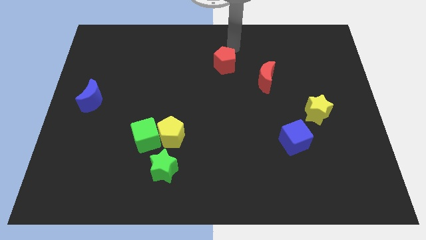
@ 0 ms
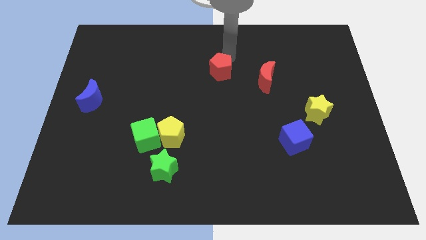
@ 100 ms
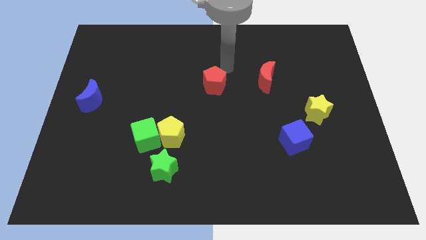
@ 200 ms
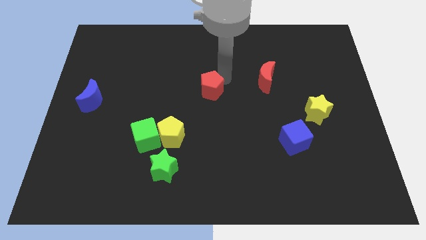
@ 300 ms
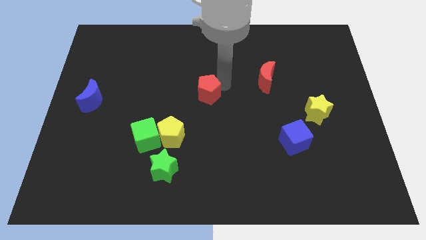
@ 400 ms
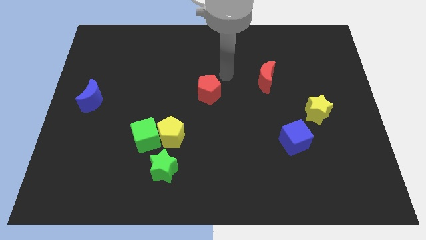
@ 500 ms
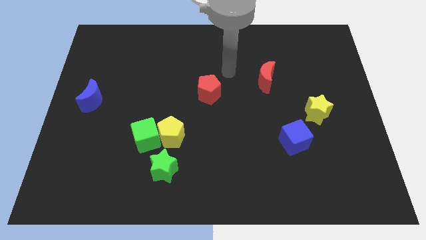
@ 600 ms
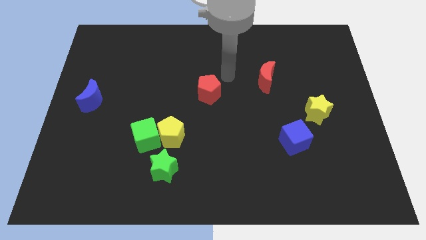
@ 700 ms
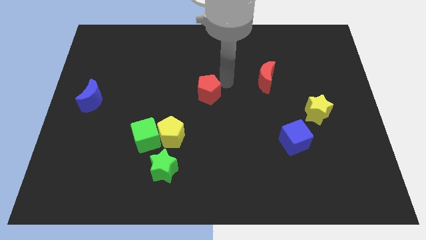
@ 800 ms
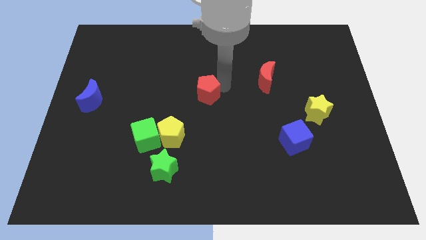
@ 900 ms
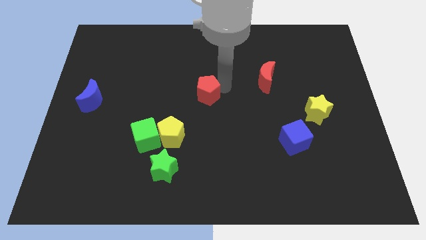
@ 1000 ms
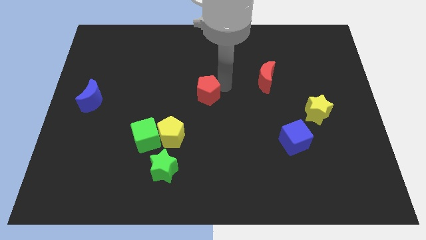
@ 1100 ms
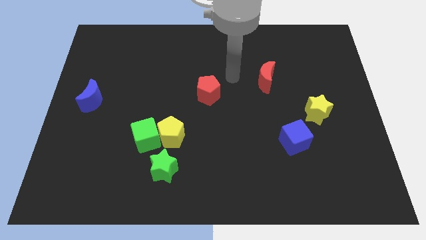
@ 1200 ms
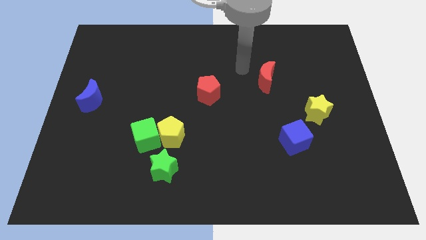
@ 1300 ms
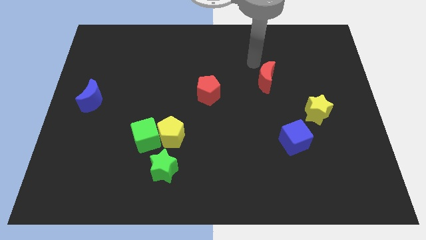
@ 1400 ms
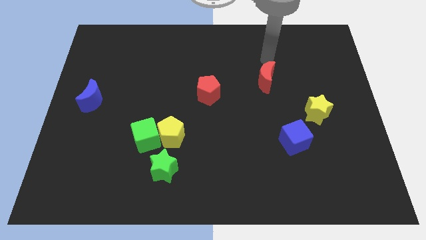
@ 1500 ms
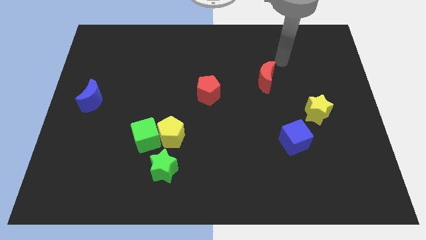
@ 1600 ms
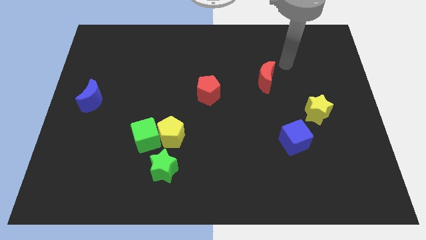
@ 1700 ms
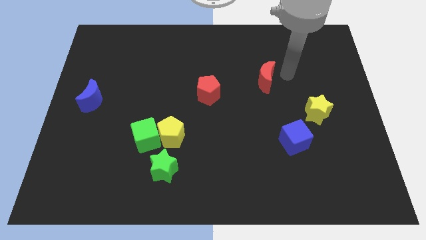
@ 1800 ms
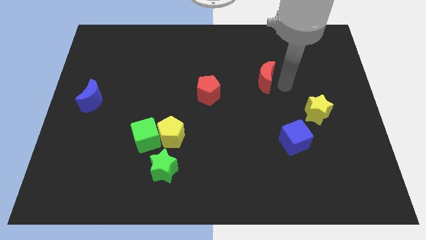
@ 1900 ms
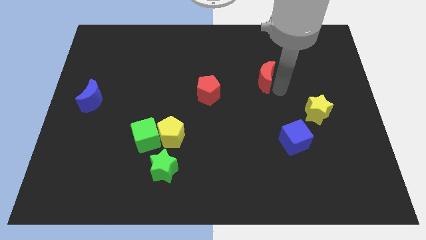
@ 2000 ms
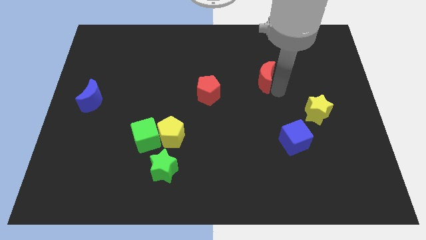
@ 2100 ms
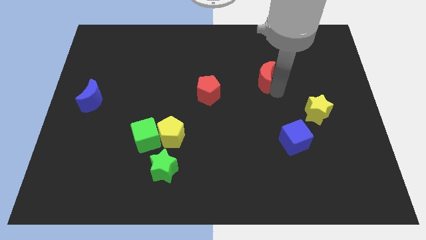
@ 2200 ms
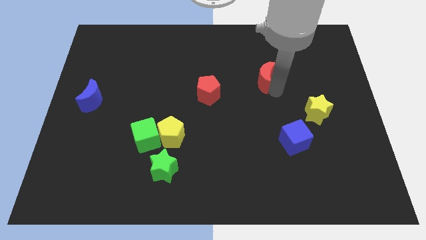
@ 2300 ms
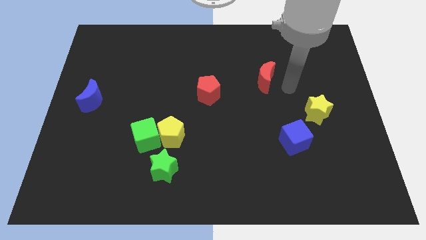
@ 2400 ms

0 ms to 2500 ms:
move red pentagon towards the center of the board

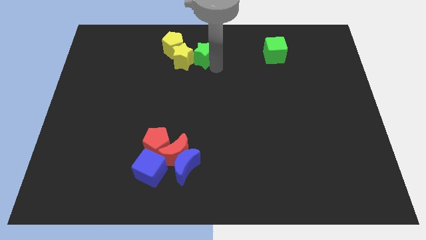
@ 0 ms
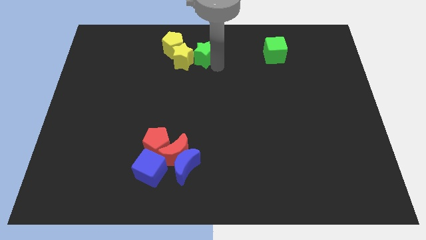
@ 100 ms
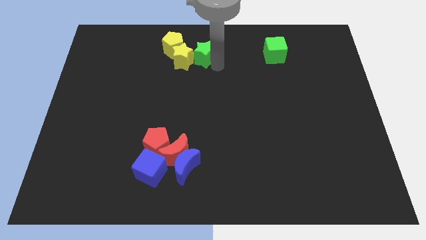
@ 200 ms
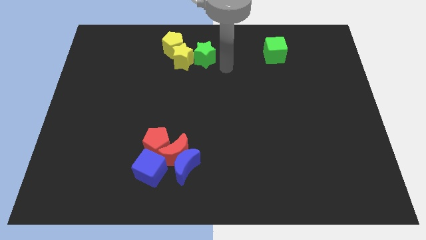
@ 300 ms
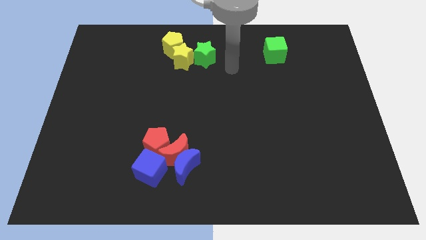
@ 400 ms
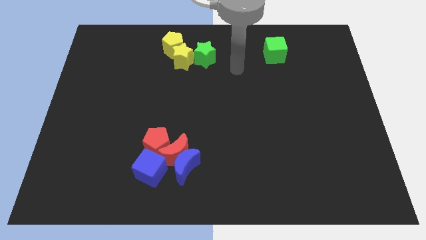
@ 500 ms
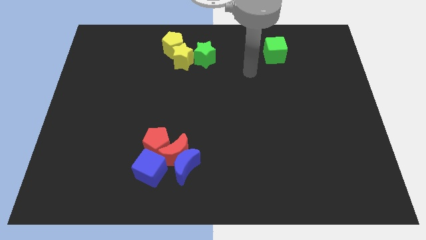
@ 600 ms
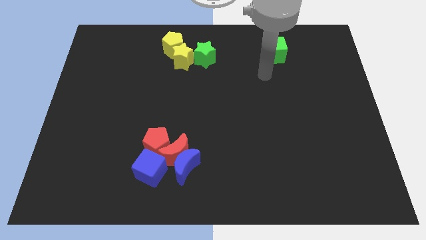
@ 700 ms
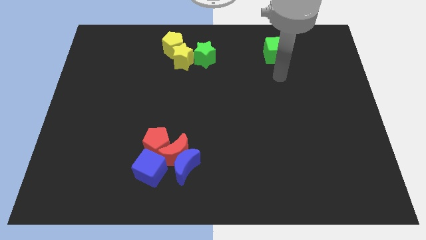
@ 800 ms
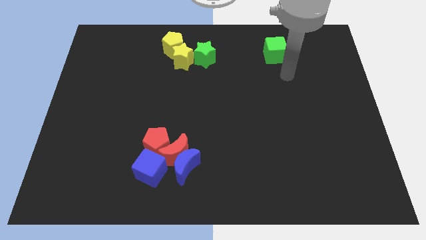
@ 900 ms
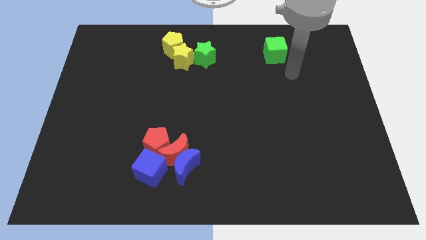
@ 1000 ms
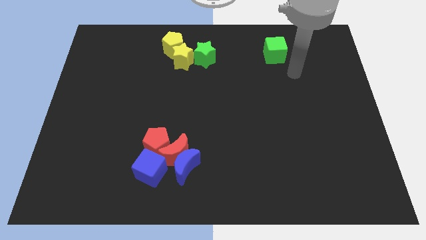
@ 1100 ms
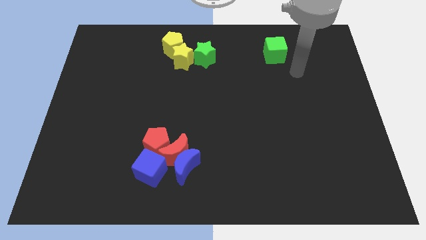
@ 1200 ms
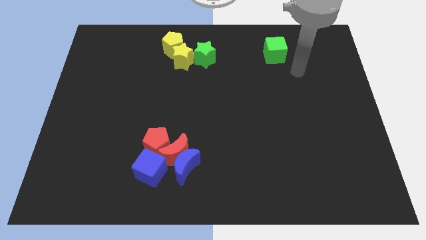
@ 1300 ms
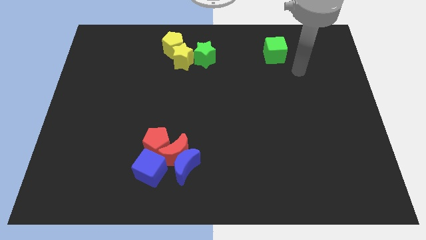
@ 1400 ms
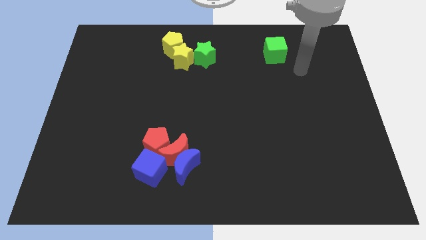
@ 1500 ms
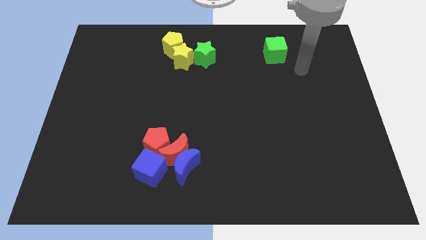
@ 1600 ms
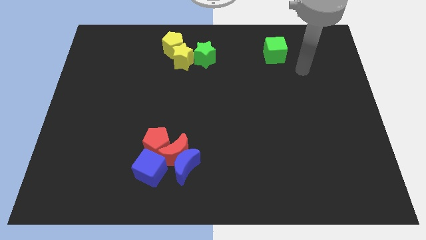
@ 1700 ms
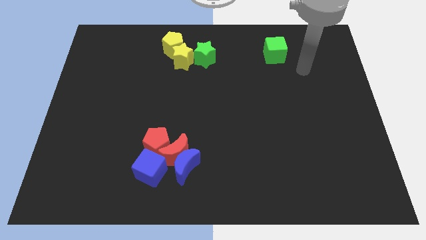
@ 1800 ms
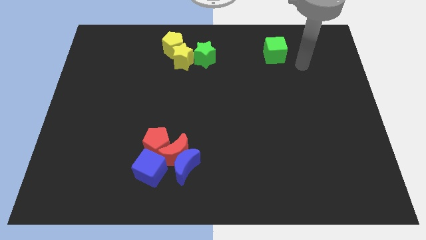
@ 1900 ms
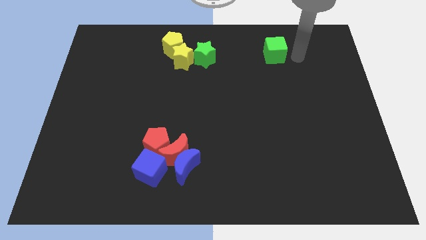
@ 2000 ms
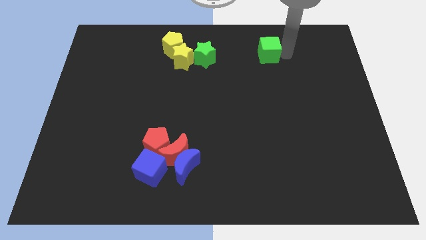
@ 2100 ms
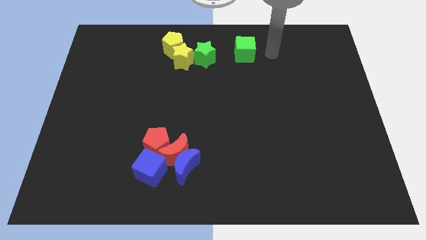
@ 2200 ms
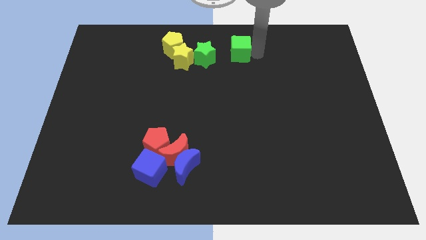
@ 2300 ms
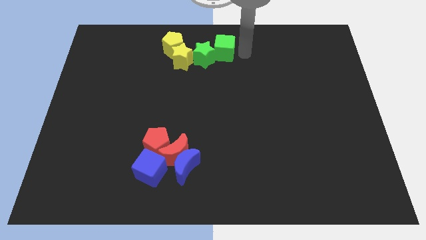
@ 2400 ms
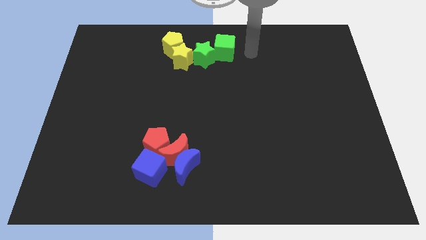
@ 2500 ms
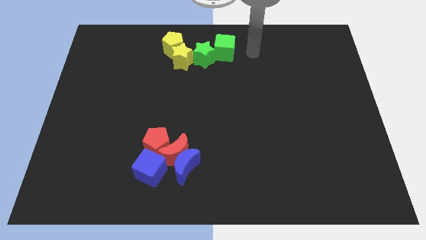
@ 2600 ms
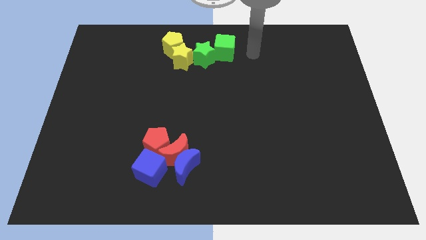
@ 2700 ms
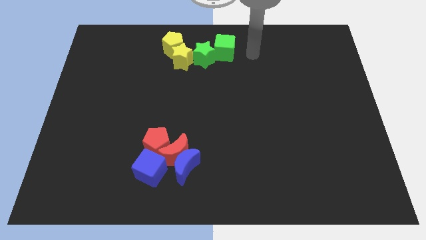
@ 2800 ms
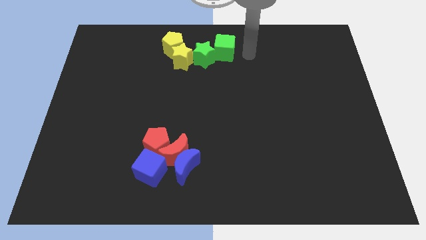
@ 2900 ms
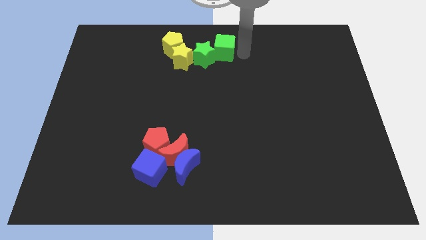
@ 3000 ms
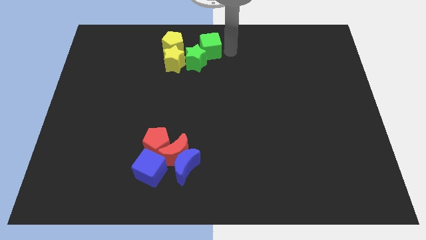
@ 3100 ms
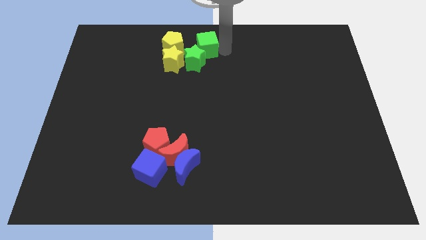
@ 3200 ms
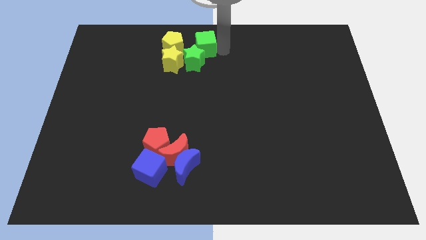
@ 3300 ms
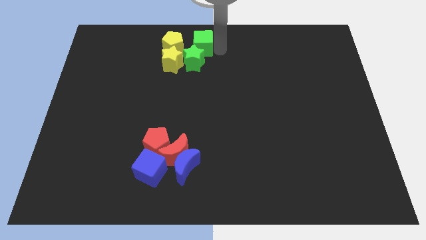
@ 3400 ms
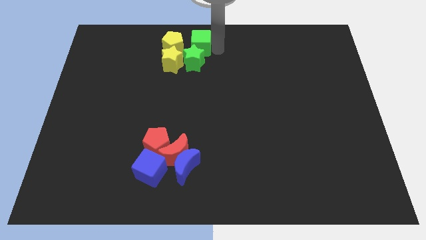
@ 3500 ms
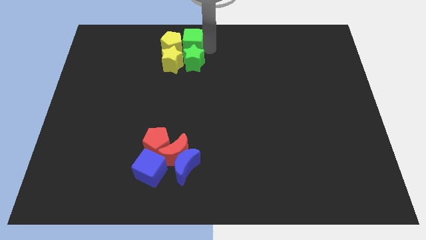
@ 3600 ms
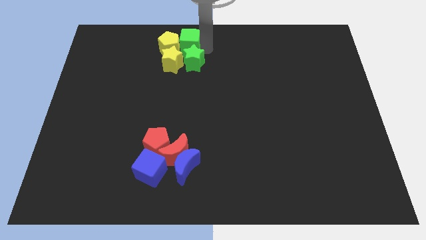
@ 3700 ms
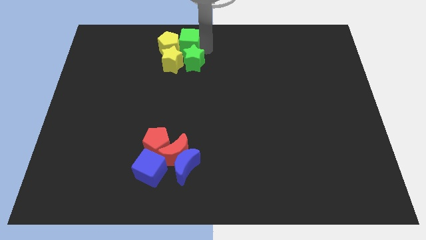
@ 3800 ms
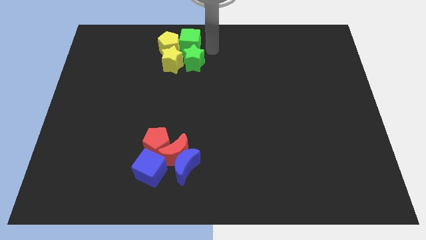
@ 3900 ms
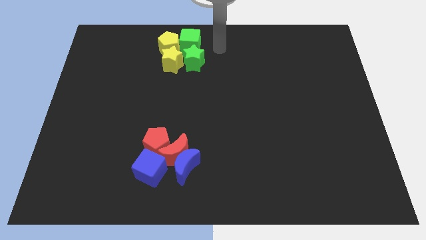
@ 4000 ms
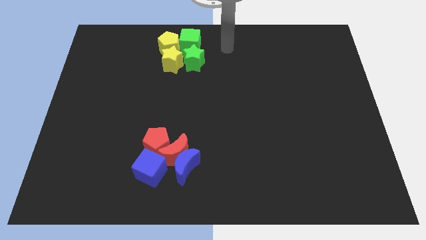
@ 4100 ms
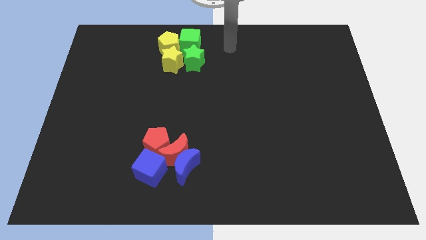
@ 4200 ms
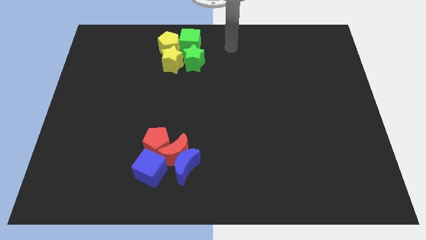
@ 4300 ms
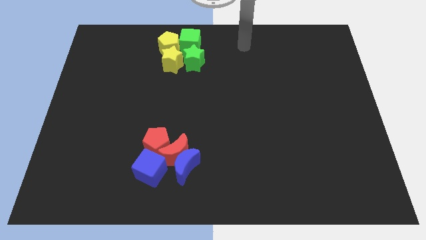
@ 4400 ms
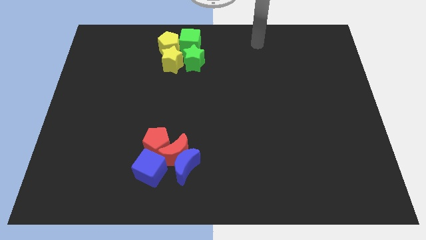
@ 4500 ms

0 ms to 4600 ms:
push the green blocks into yellow blocks

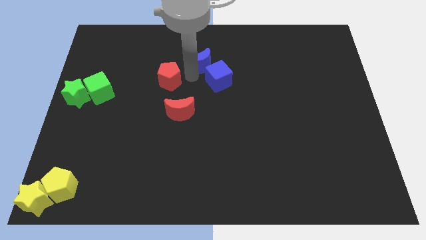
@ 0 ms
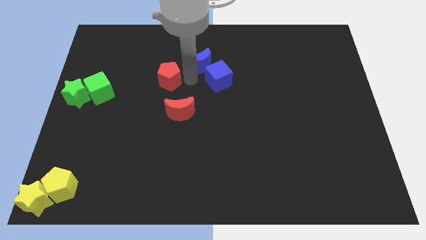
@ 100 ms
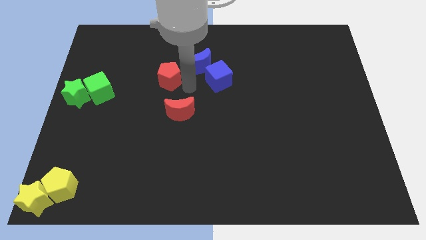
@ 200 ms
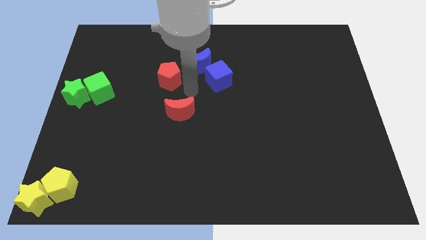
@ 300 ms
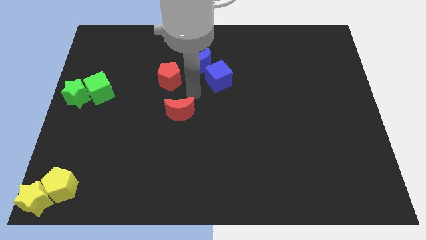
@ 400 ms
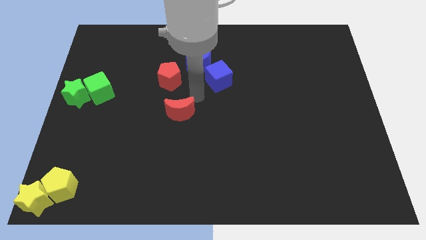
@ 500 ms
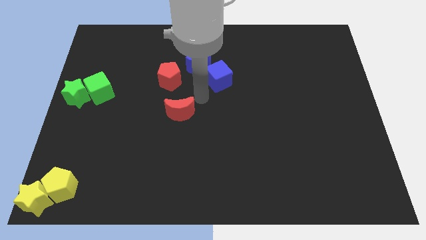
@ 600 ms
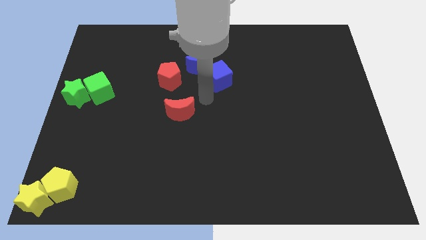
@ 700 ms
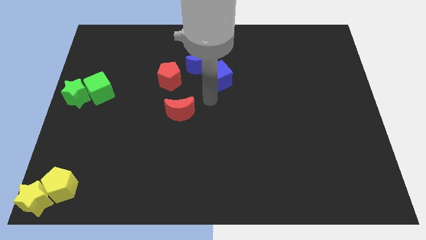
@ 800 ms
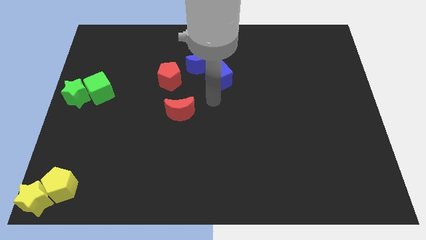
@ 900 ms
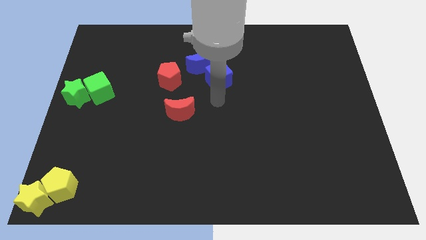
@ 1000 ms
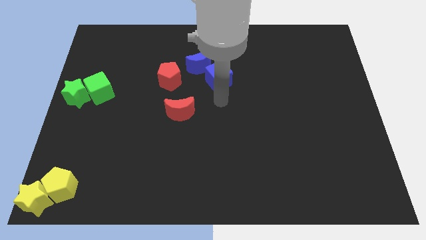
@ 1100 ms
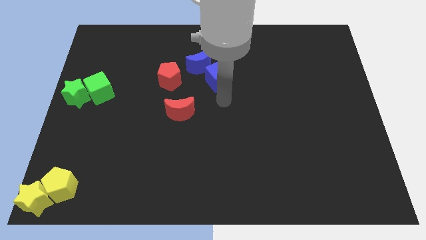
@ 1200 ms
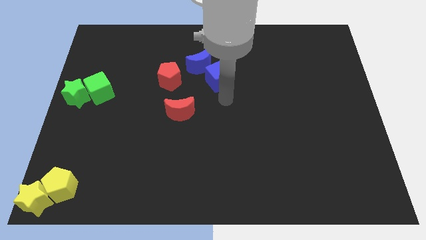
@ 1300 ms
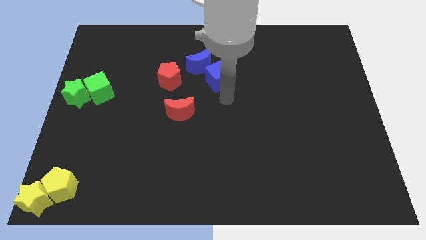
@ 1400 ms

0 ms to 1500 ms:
move your arm away from blue moon

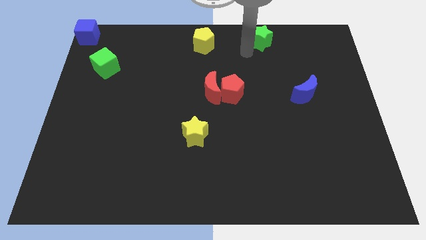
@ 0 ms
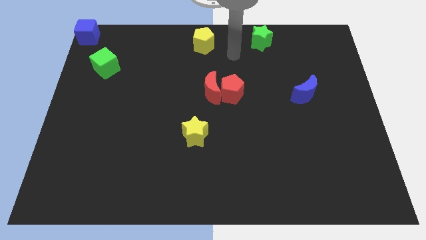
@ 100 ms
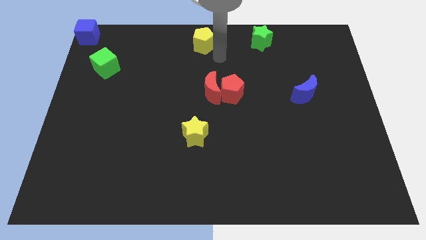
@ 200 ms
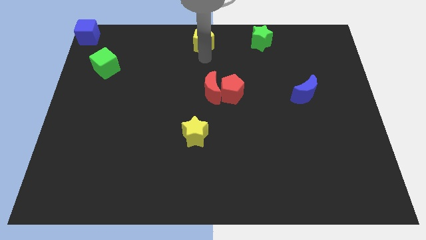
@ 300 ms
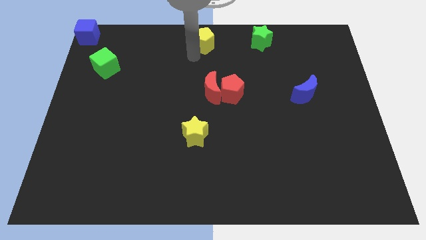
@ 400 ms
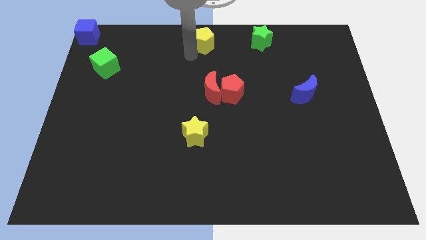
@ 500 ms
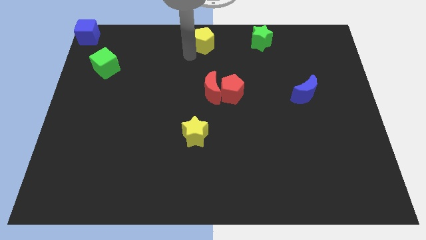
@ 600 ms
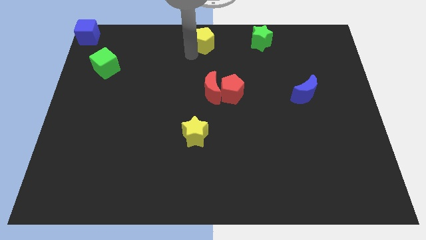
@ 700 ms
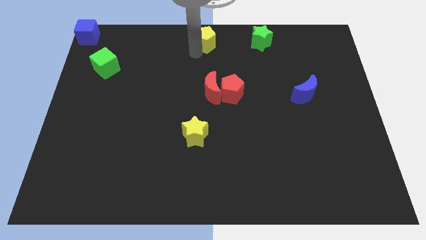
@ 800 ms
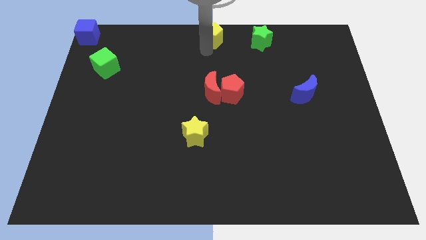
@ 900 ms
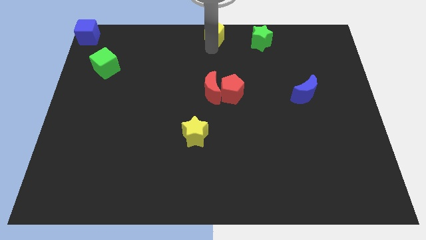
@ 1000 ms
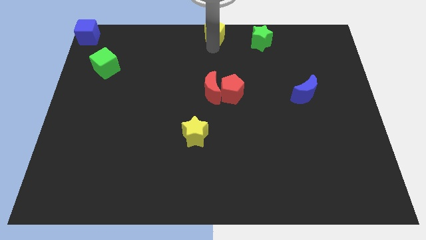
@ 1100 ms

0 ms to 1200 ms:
move the yellow pentagon to the top center of the board
